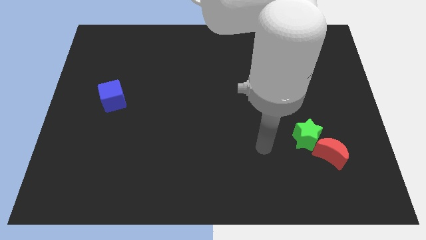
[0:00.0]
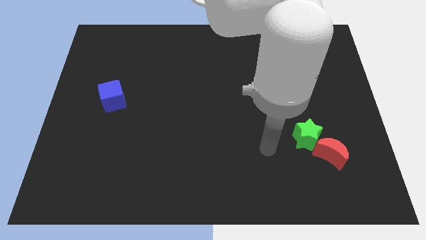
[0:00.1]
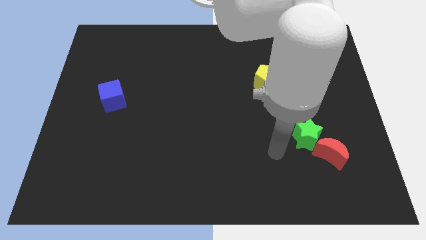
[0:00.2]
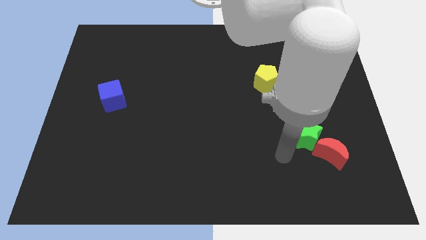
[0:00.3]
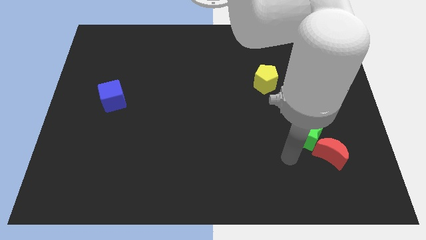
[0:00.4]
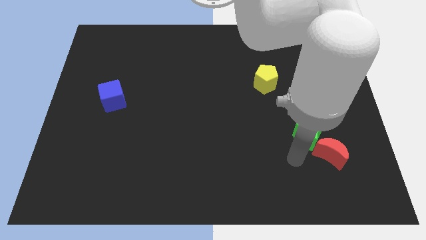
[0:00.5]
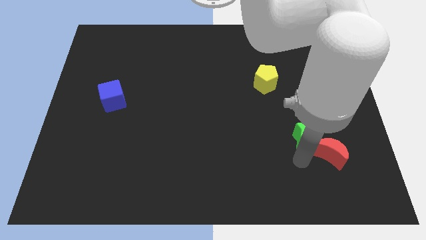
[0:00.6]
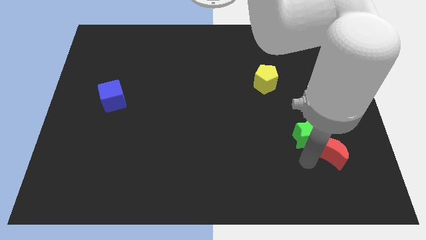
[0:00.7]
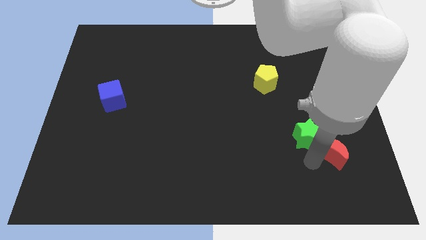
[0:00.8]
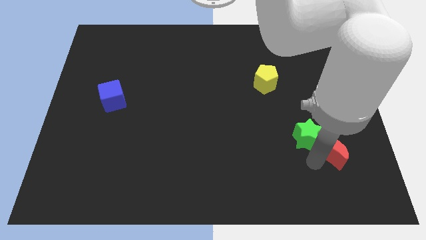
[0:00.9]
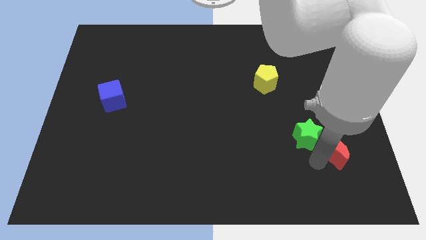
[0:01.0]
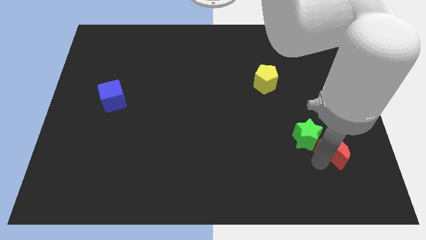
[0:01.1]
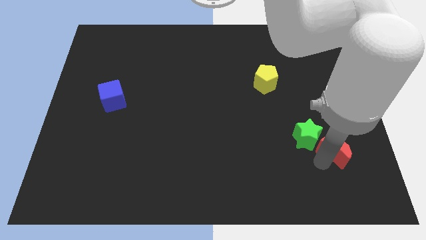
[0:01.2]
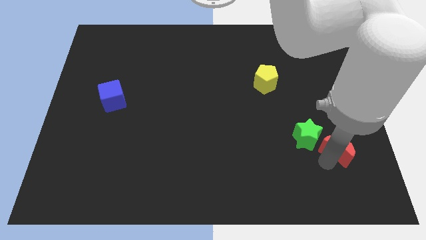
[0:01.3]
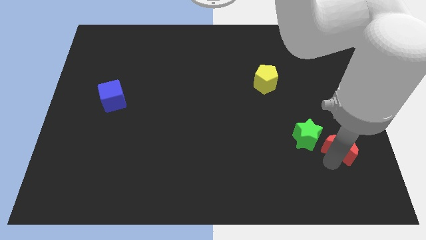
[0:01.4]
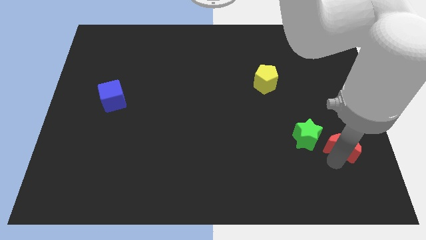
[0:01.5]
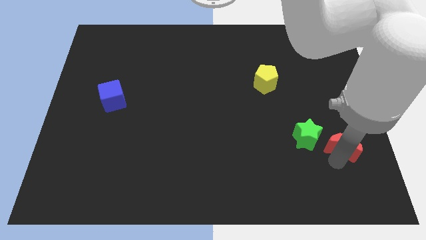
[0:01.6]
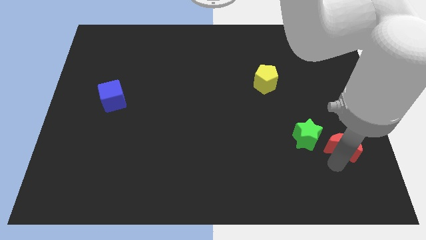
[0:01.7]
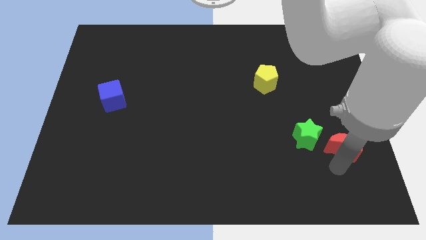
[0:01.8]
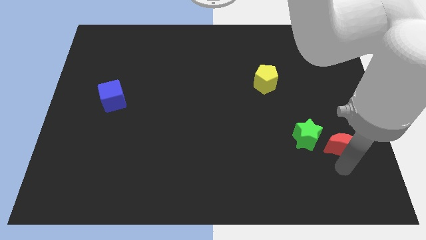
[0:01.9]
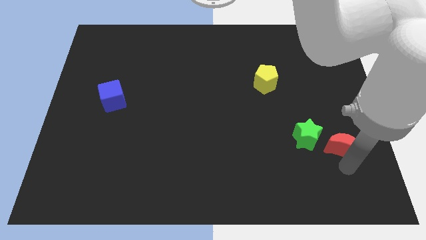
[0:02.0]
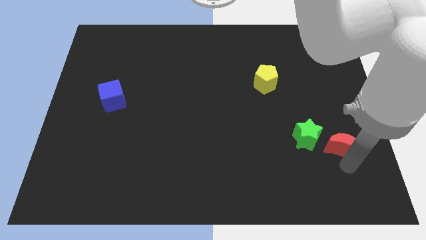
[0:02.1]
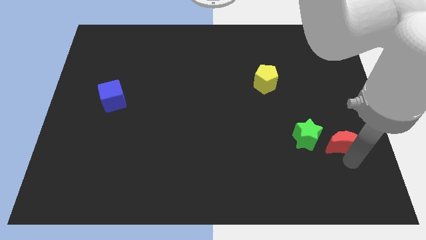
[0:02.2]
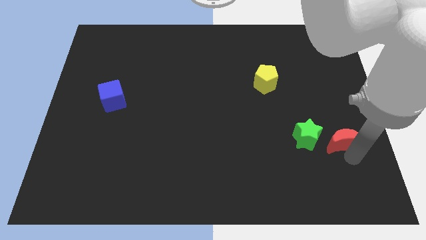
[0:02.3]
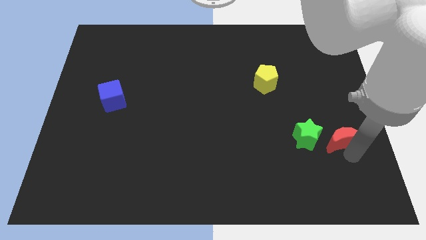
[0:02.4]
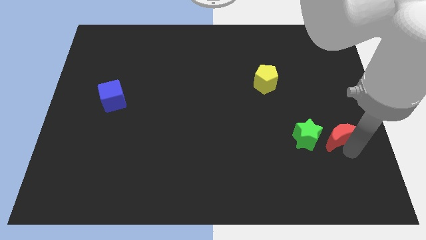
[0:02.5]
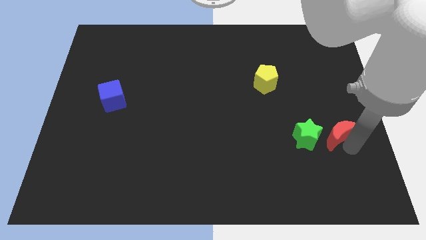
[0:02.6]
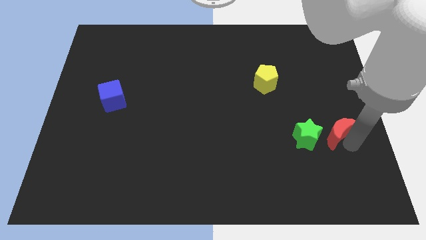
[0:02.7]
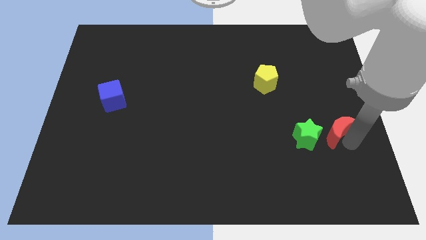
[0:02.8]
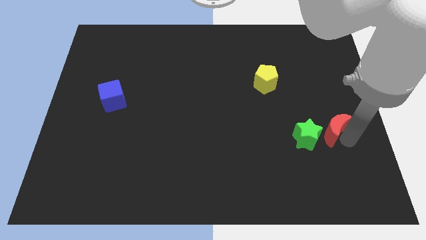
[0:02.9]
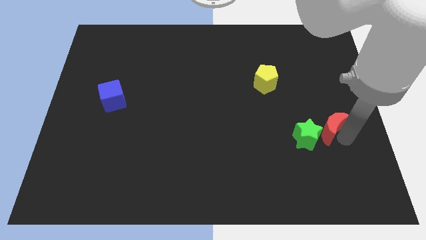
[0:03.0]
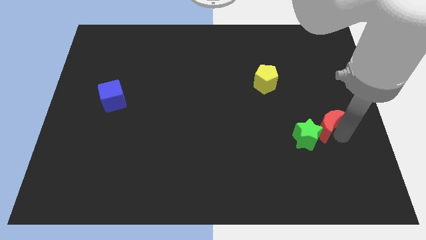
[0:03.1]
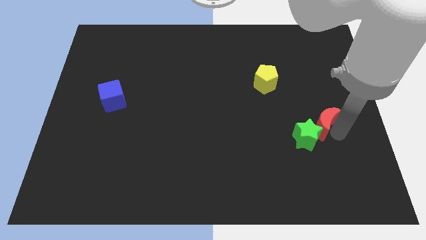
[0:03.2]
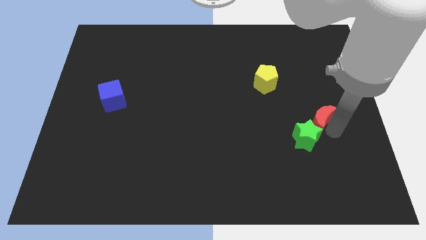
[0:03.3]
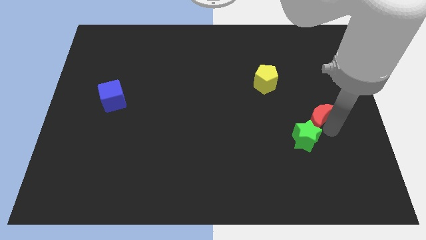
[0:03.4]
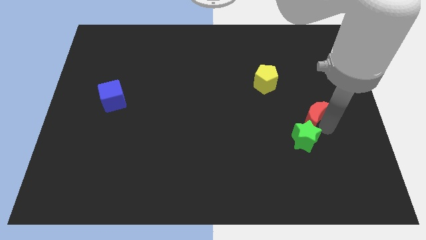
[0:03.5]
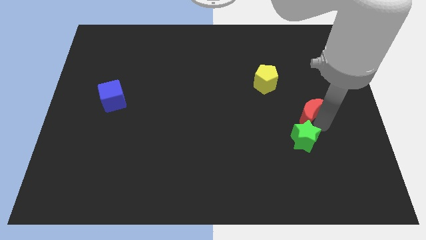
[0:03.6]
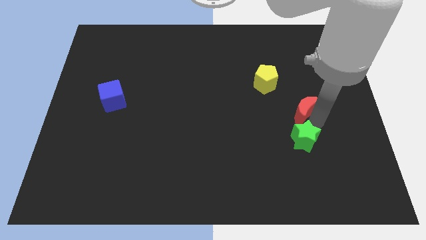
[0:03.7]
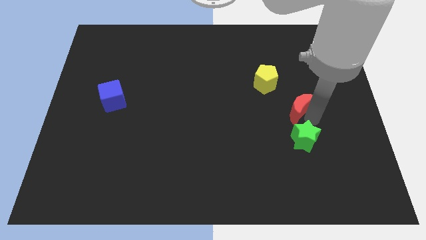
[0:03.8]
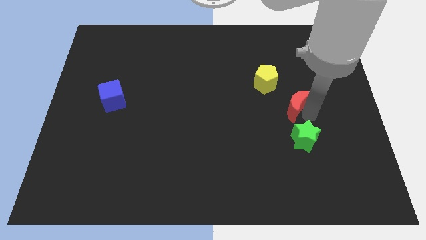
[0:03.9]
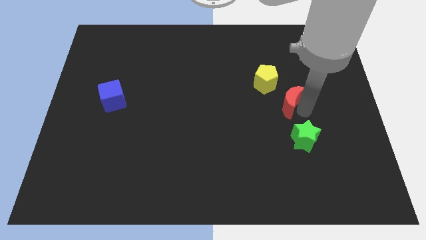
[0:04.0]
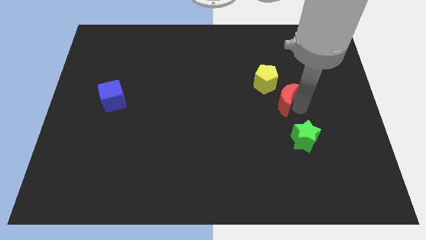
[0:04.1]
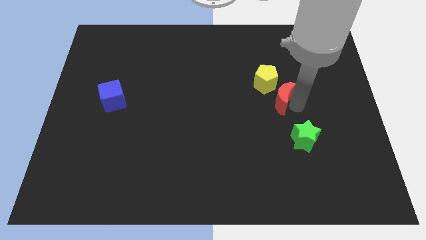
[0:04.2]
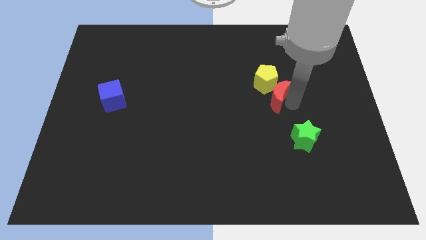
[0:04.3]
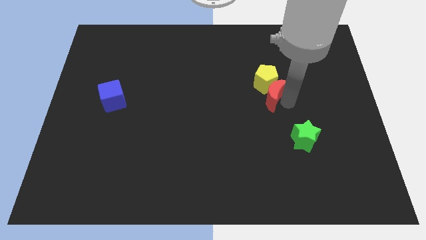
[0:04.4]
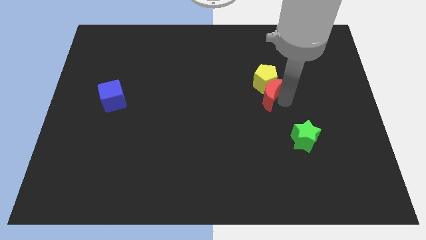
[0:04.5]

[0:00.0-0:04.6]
slide the red moon towards the pentagon

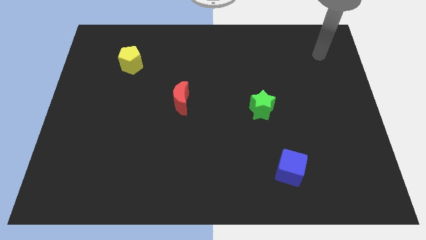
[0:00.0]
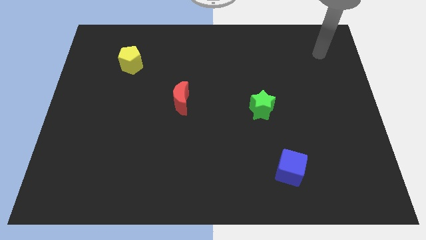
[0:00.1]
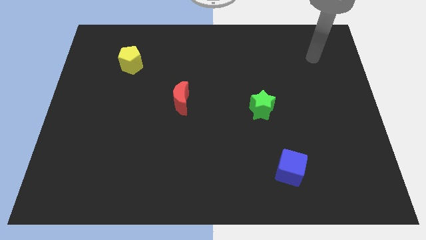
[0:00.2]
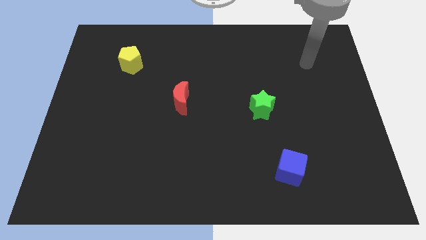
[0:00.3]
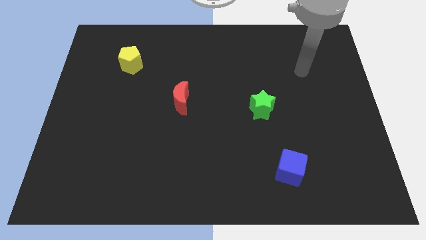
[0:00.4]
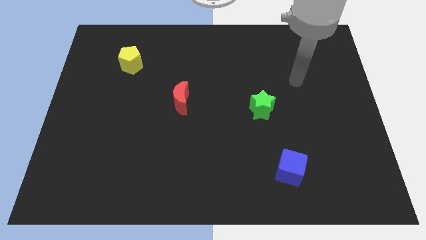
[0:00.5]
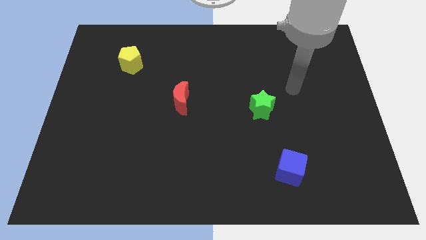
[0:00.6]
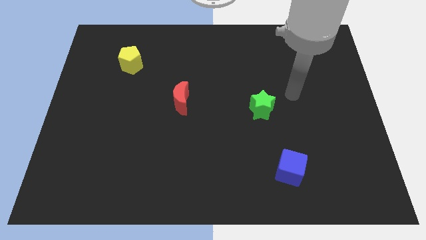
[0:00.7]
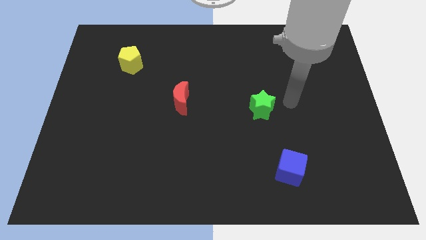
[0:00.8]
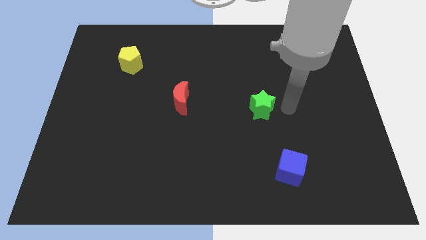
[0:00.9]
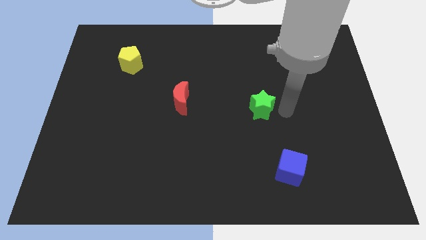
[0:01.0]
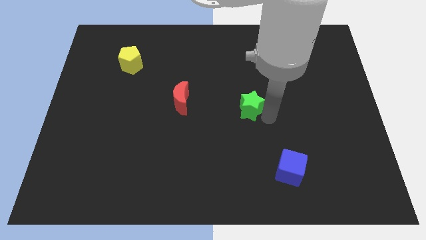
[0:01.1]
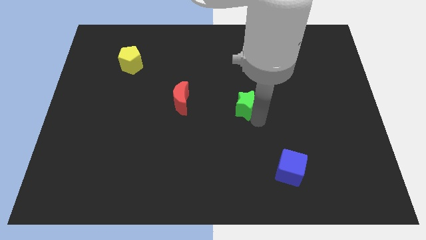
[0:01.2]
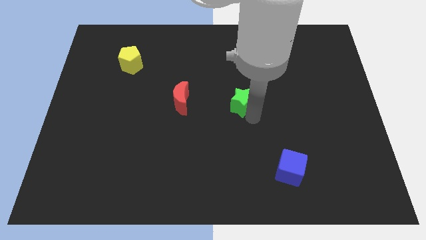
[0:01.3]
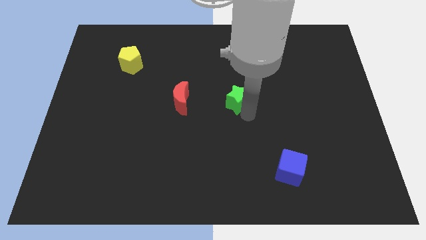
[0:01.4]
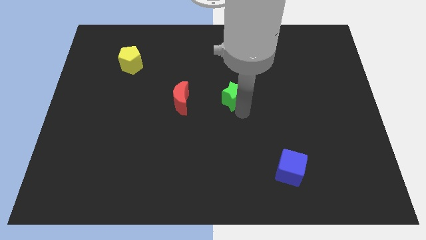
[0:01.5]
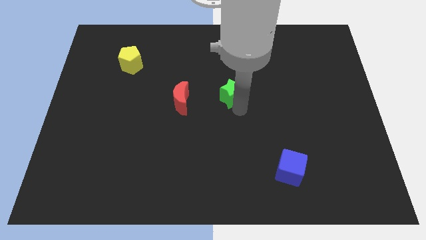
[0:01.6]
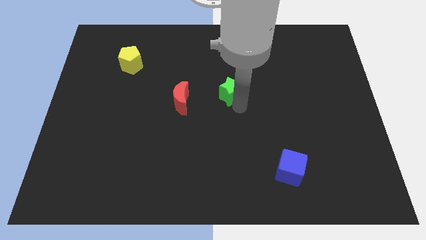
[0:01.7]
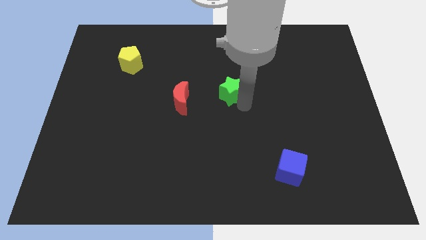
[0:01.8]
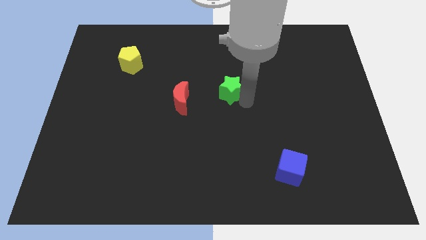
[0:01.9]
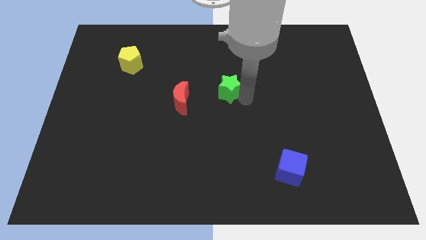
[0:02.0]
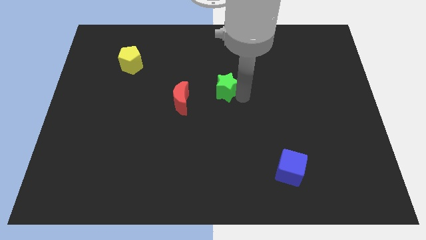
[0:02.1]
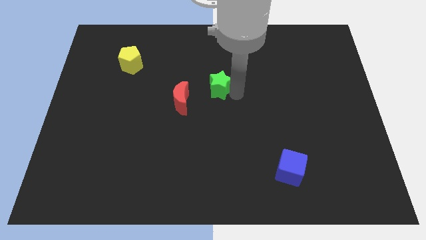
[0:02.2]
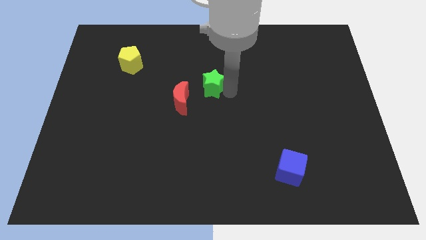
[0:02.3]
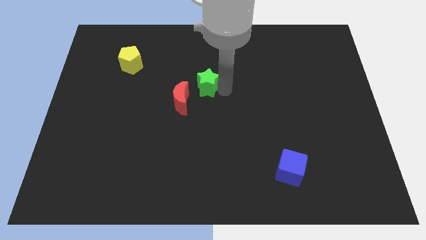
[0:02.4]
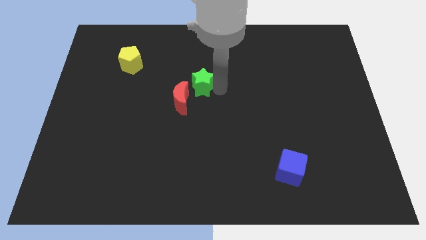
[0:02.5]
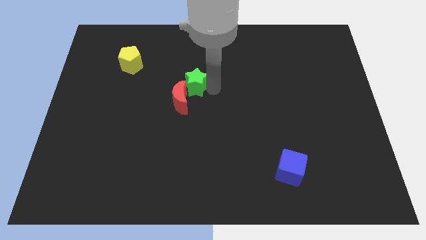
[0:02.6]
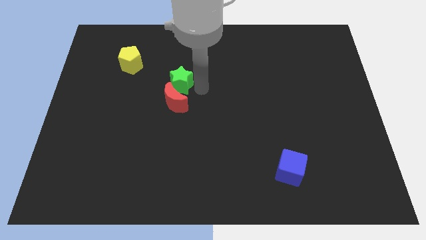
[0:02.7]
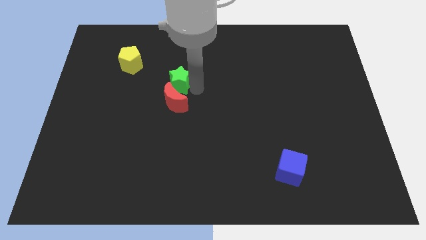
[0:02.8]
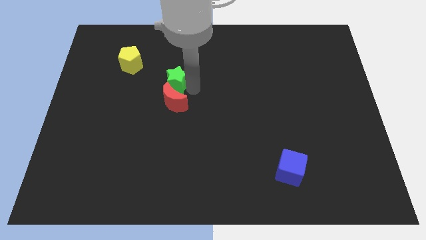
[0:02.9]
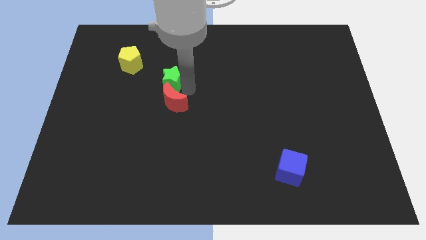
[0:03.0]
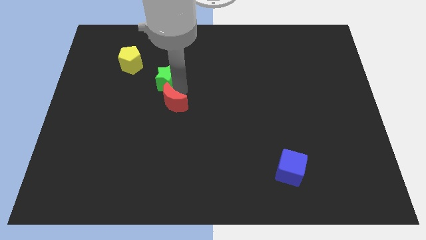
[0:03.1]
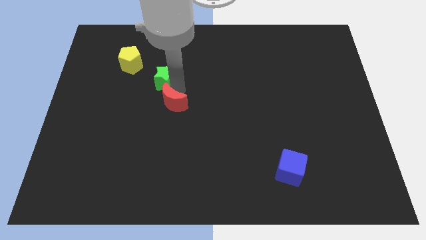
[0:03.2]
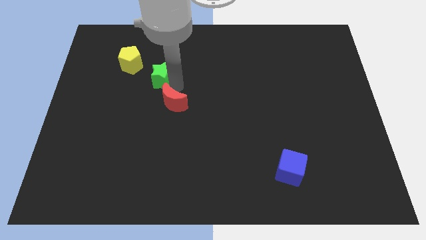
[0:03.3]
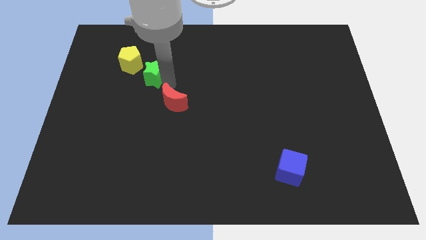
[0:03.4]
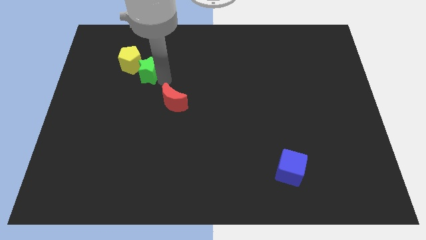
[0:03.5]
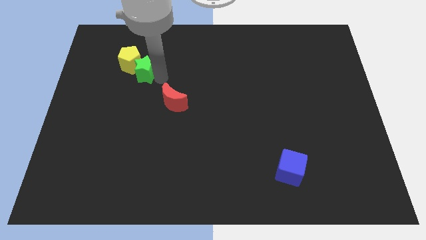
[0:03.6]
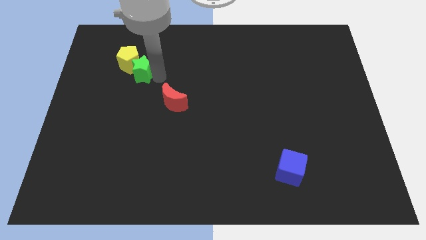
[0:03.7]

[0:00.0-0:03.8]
put the green star to the pentagon

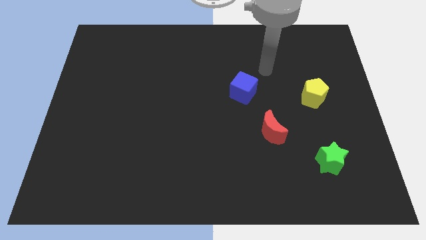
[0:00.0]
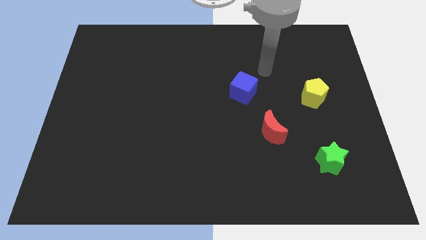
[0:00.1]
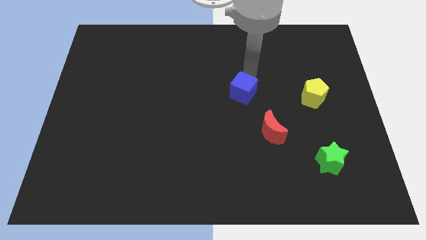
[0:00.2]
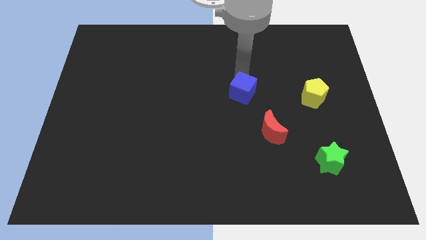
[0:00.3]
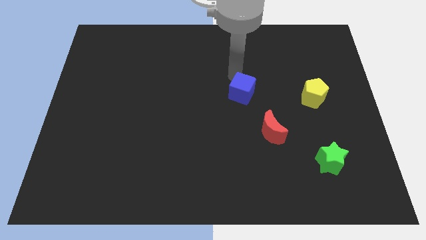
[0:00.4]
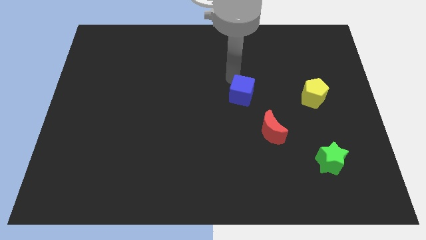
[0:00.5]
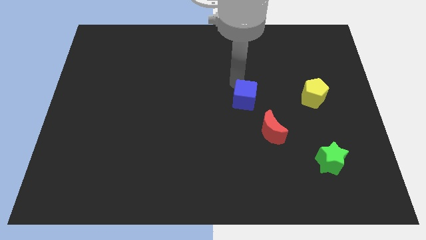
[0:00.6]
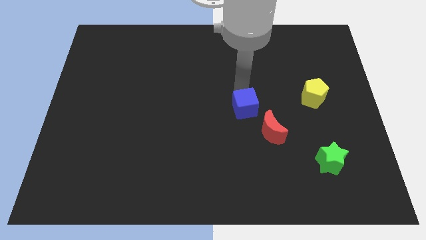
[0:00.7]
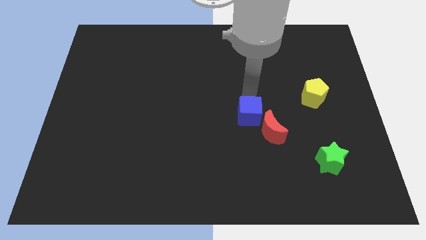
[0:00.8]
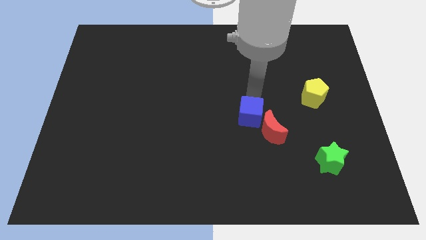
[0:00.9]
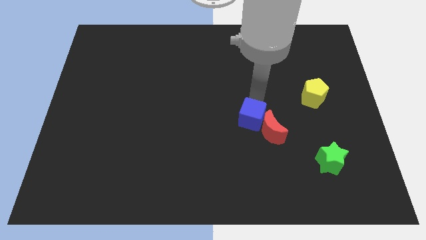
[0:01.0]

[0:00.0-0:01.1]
slide the cube to the red moon
